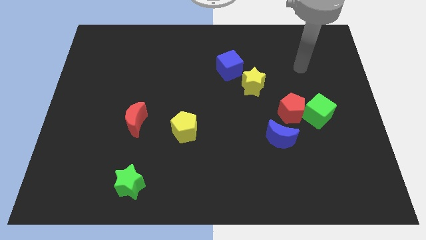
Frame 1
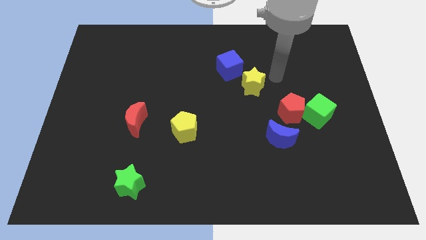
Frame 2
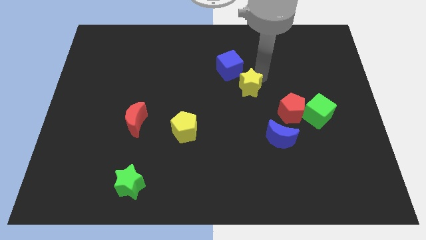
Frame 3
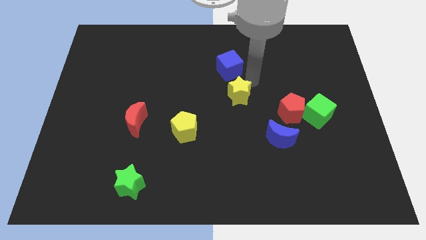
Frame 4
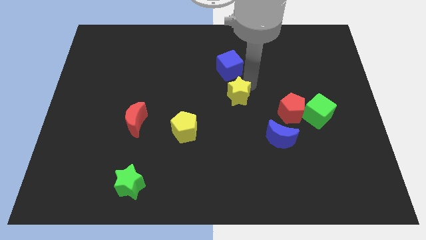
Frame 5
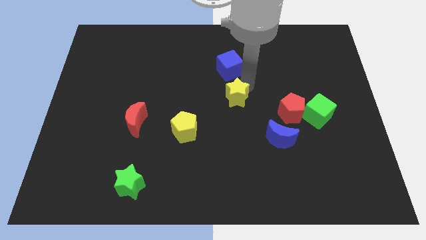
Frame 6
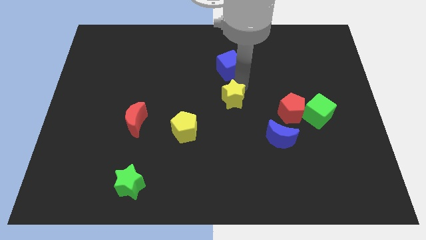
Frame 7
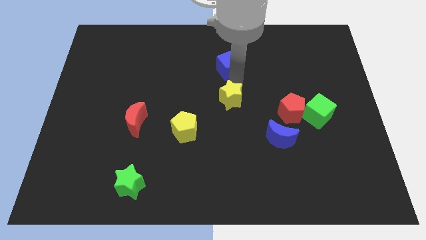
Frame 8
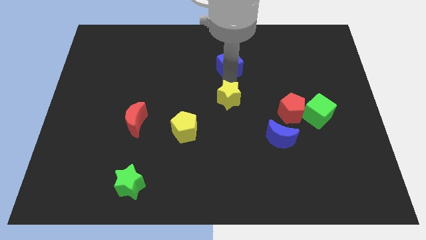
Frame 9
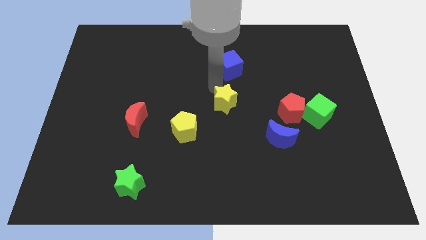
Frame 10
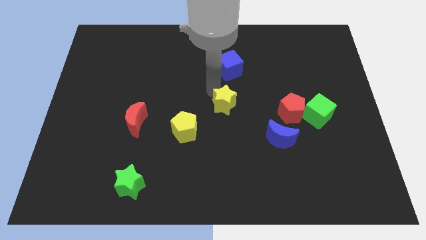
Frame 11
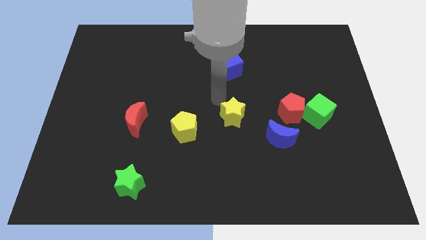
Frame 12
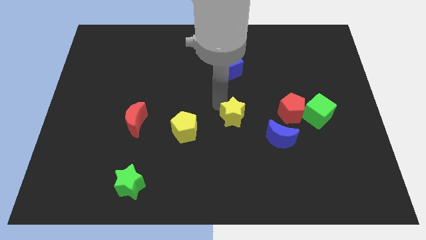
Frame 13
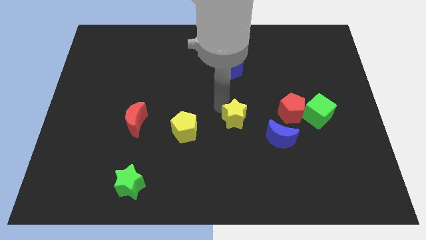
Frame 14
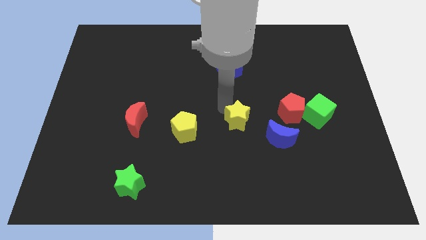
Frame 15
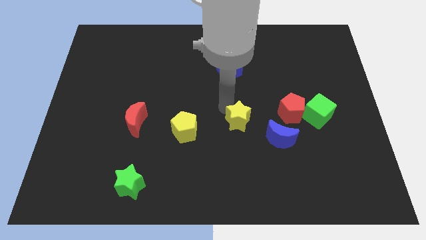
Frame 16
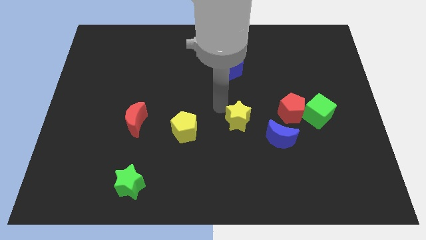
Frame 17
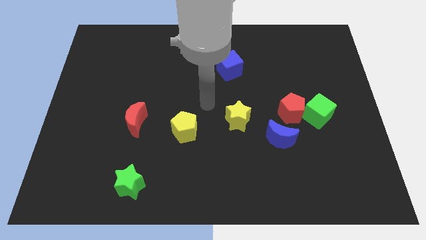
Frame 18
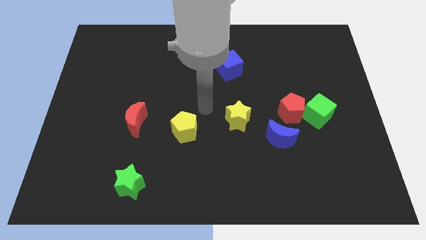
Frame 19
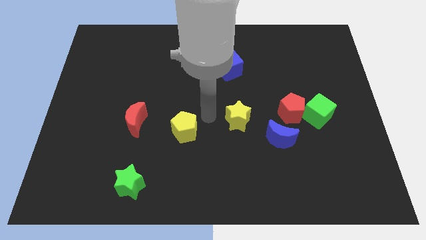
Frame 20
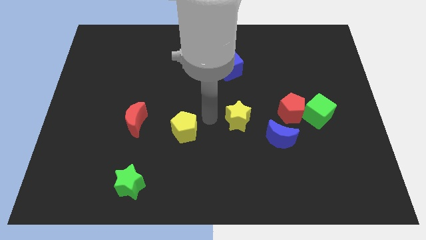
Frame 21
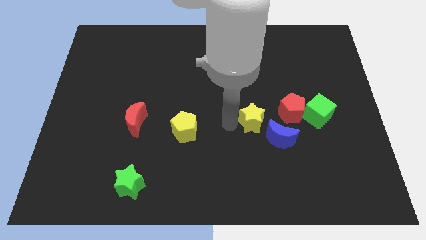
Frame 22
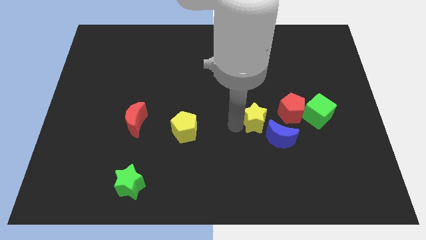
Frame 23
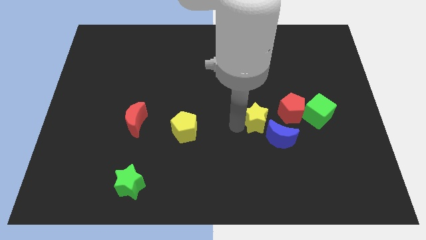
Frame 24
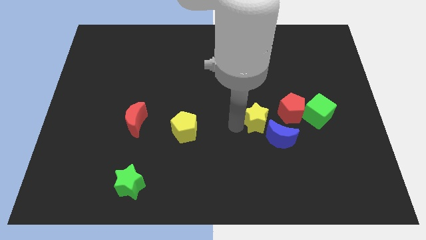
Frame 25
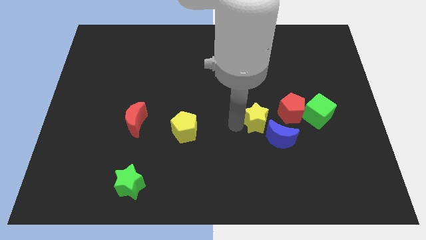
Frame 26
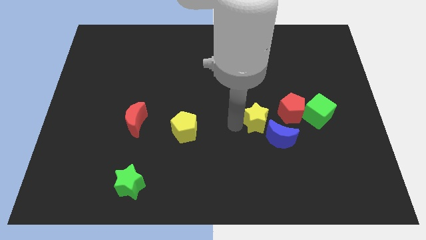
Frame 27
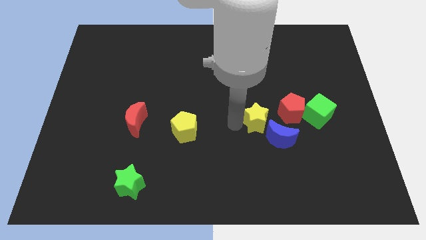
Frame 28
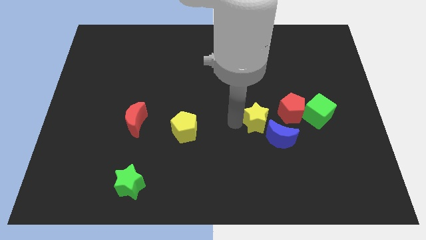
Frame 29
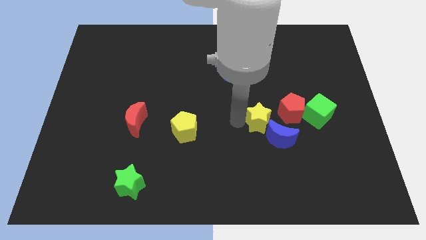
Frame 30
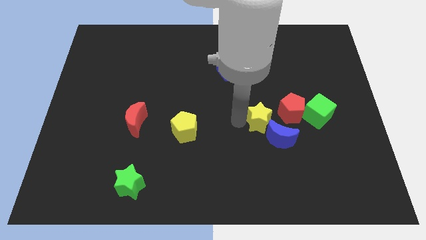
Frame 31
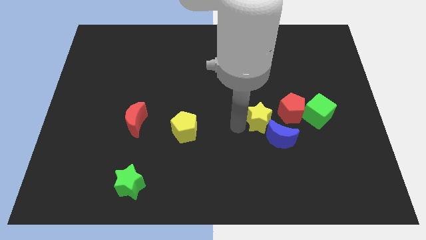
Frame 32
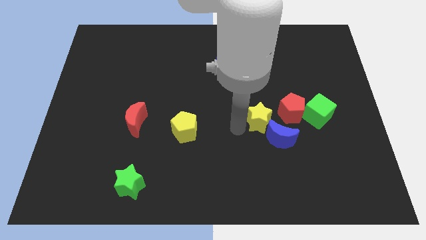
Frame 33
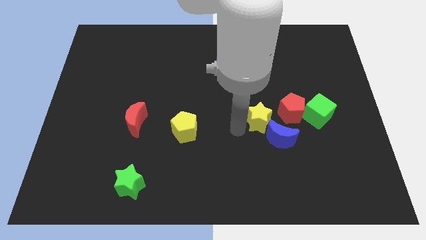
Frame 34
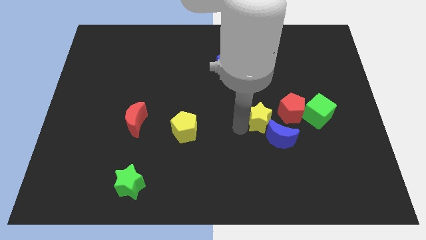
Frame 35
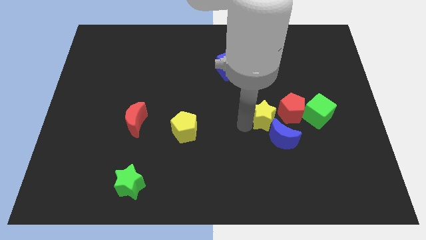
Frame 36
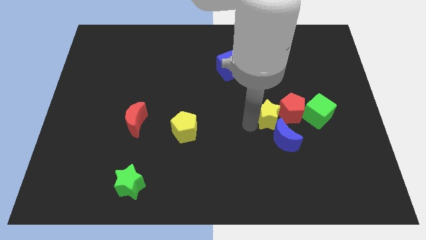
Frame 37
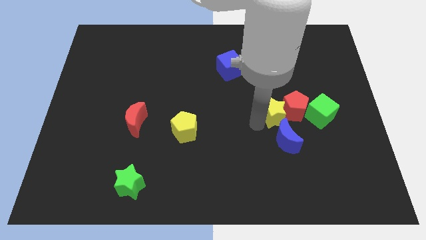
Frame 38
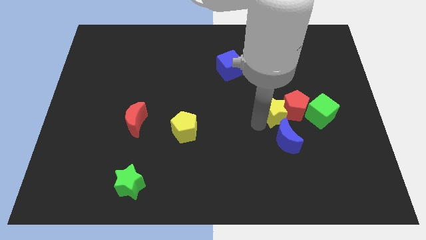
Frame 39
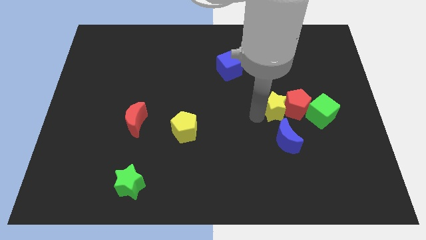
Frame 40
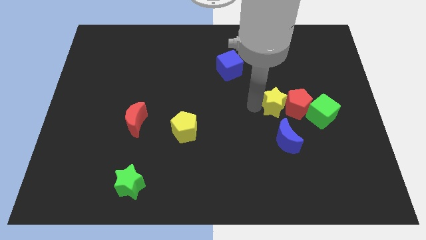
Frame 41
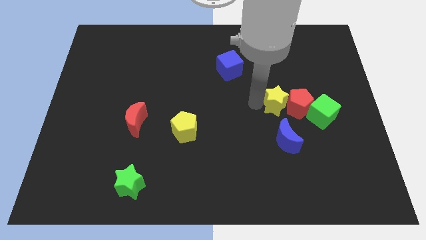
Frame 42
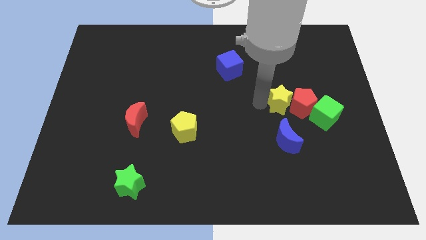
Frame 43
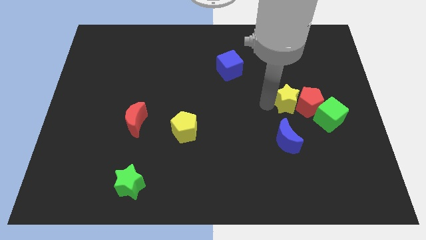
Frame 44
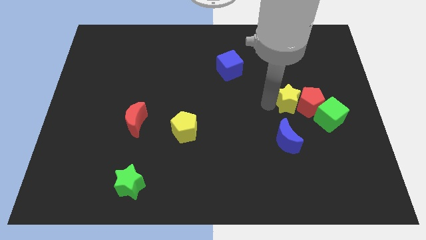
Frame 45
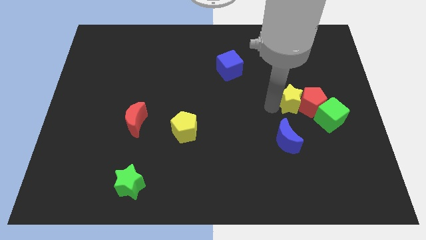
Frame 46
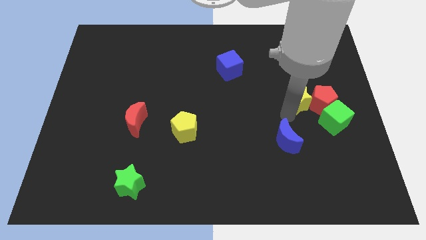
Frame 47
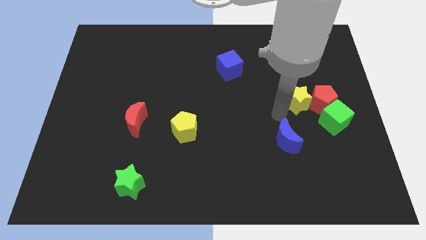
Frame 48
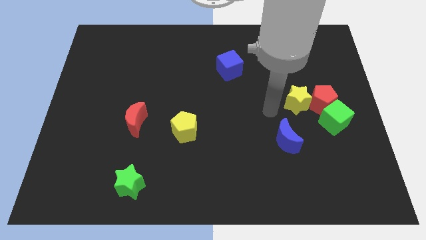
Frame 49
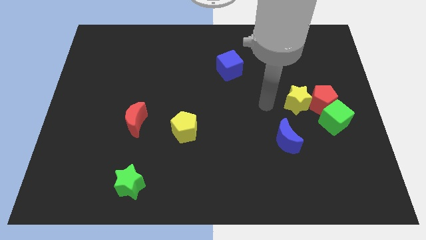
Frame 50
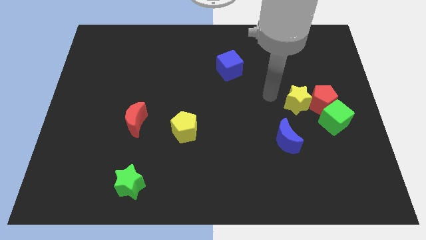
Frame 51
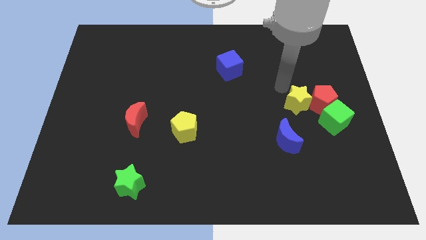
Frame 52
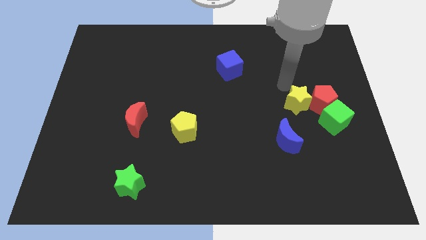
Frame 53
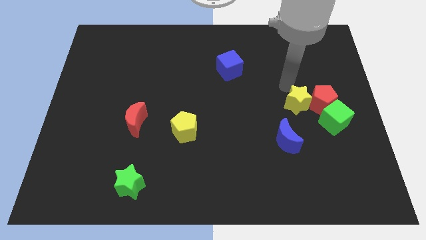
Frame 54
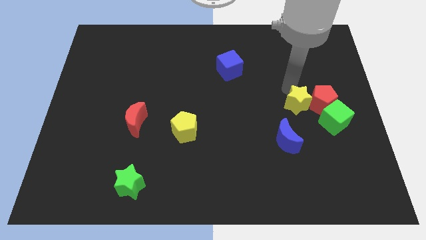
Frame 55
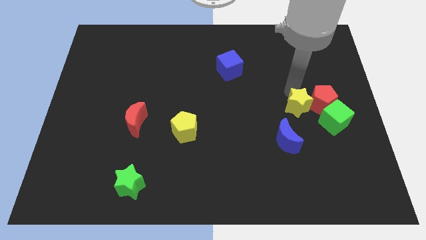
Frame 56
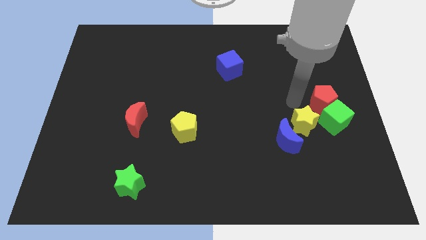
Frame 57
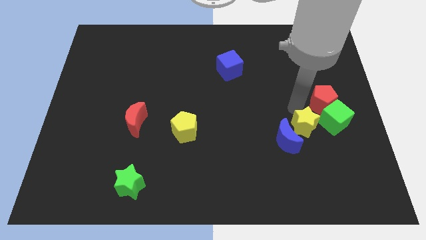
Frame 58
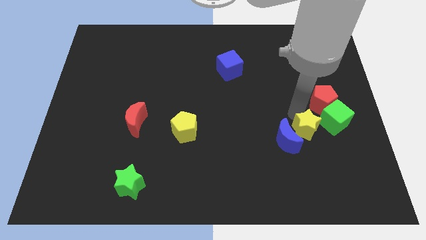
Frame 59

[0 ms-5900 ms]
put the yellow star close to the blue moon

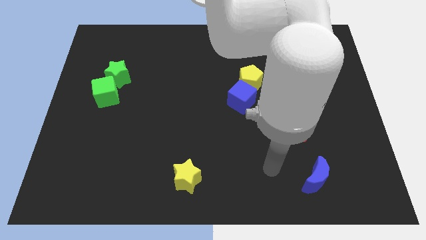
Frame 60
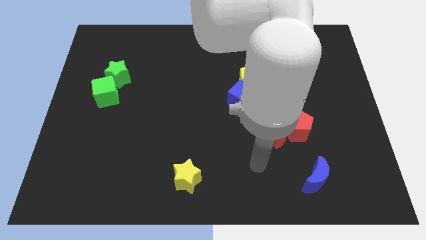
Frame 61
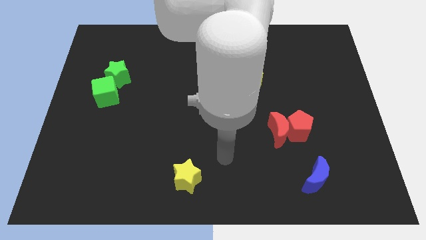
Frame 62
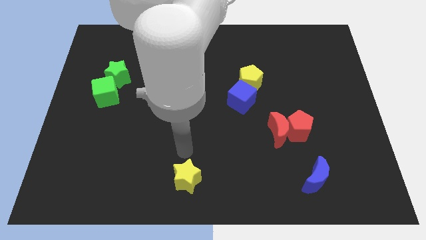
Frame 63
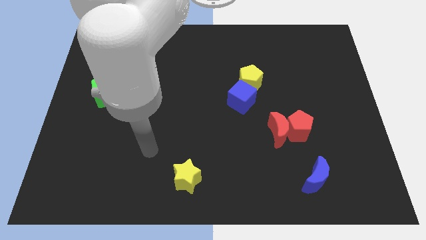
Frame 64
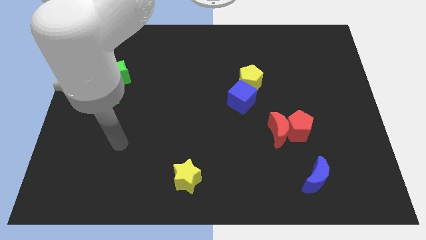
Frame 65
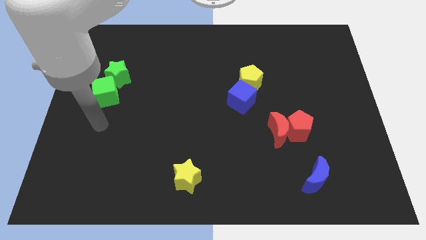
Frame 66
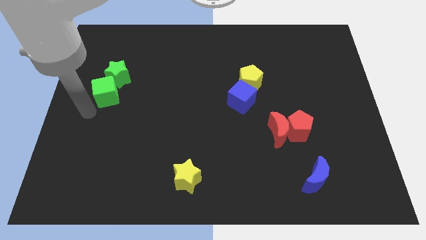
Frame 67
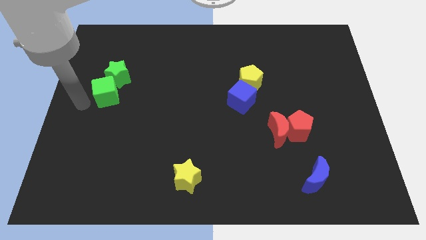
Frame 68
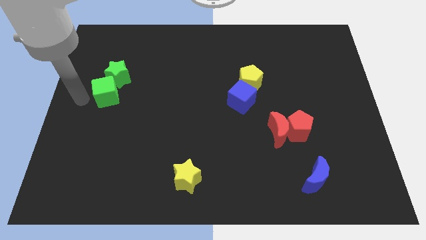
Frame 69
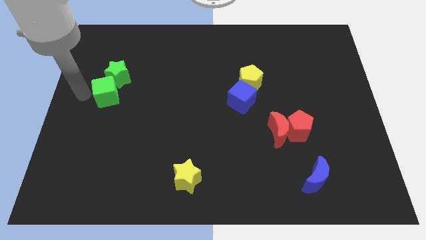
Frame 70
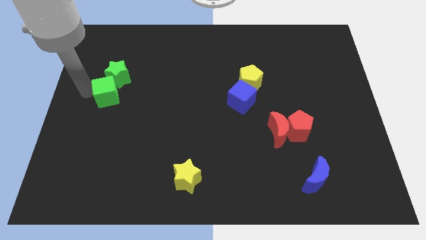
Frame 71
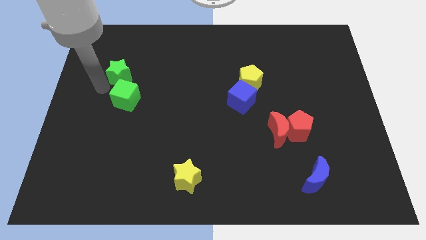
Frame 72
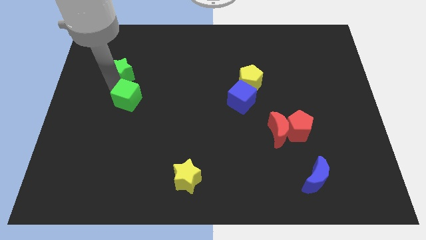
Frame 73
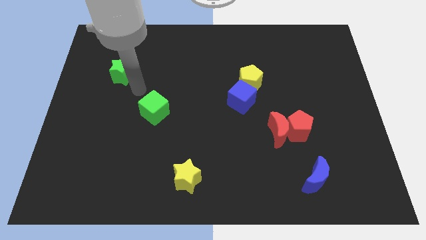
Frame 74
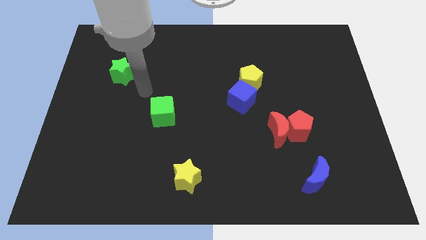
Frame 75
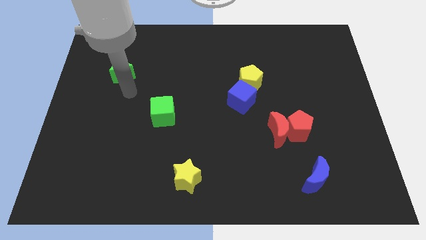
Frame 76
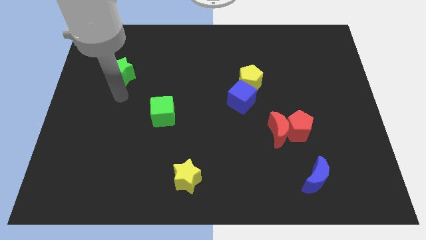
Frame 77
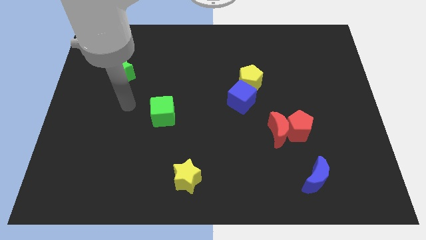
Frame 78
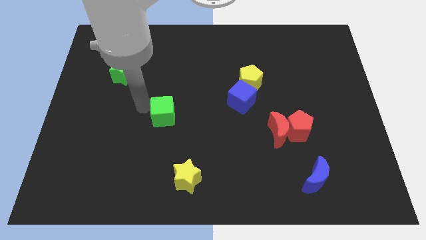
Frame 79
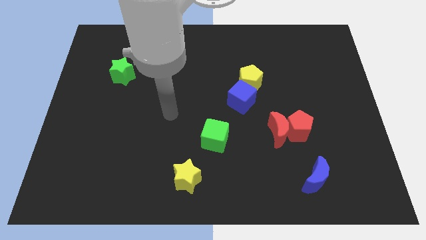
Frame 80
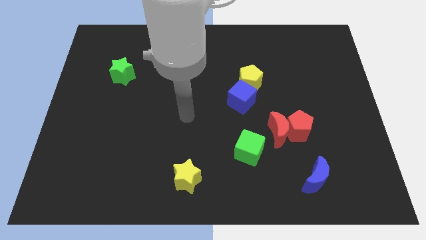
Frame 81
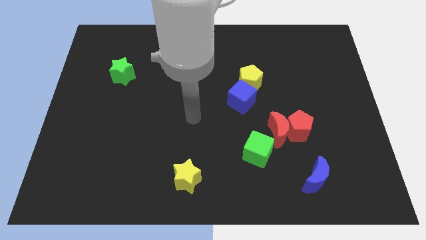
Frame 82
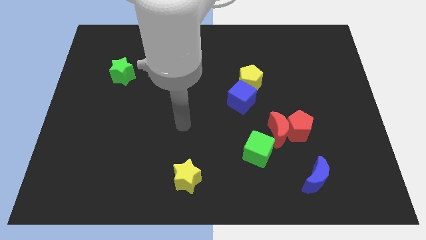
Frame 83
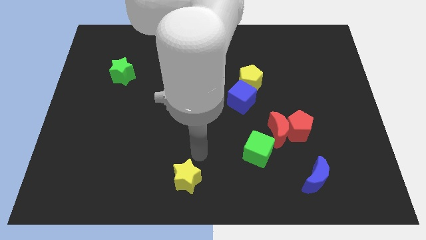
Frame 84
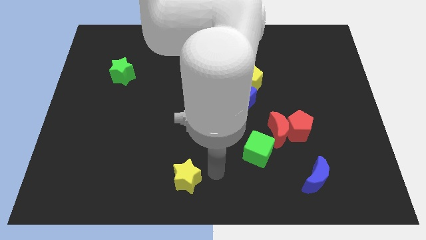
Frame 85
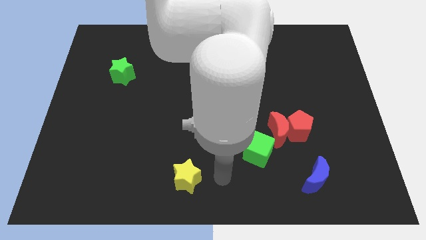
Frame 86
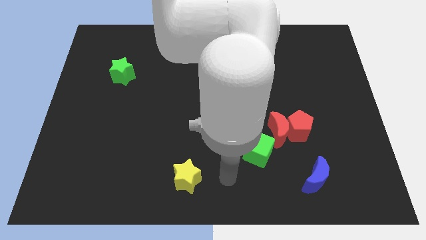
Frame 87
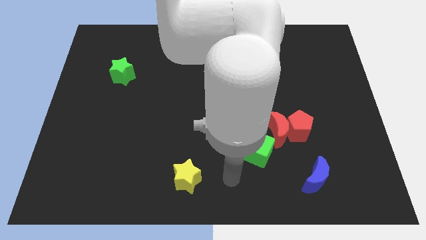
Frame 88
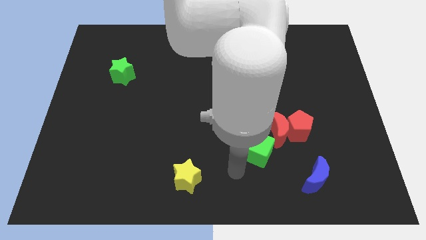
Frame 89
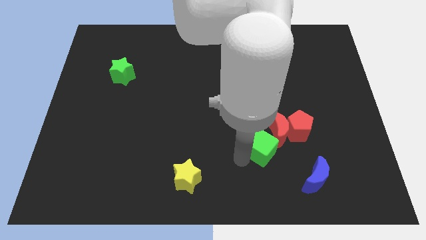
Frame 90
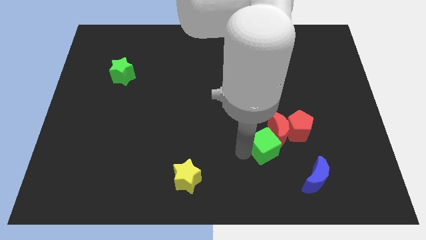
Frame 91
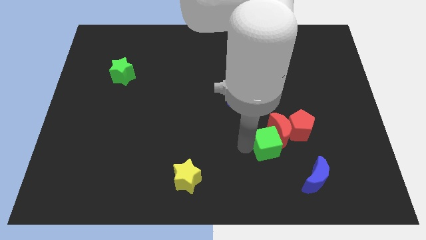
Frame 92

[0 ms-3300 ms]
slide the green cube next to the red moon
